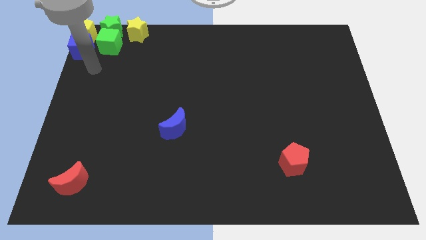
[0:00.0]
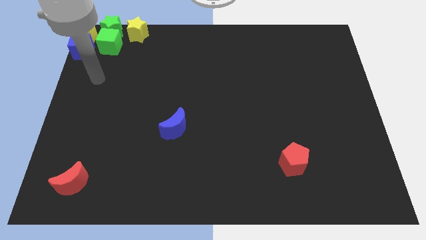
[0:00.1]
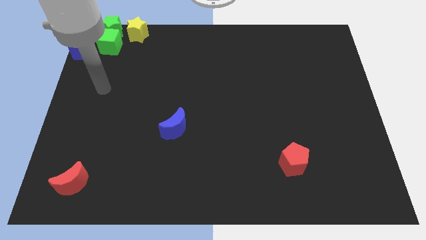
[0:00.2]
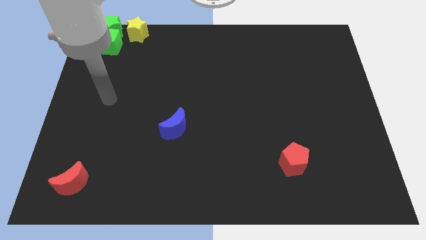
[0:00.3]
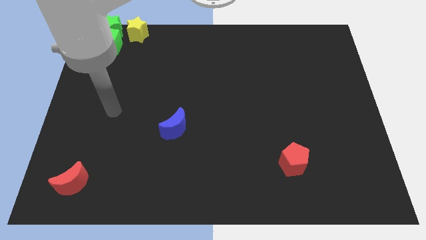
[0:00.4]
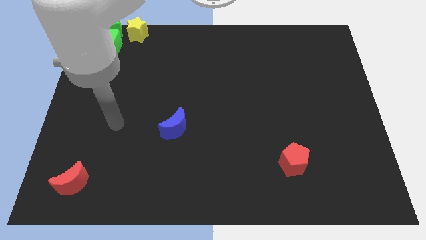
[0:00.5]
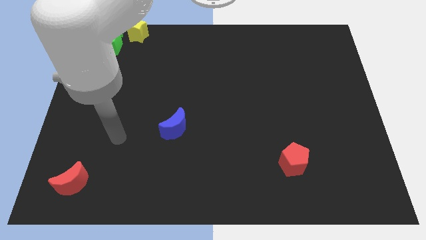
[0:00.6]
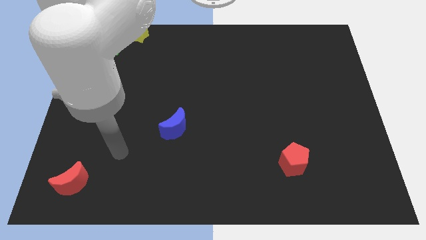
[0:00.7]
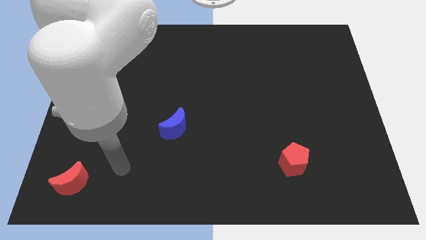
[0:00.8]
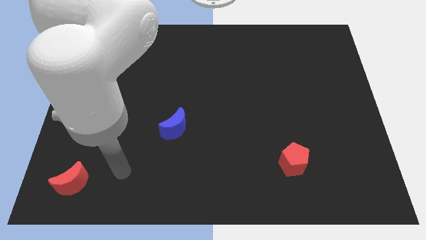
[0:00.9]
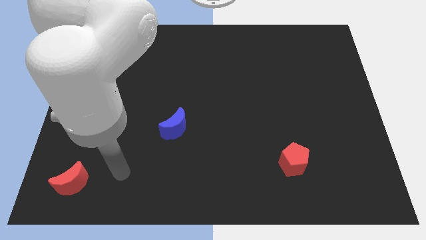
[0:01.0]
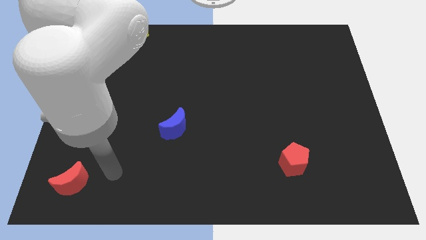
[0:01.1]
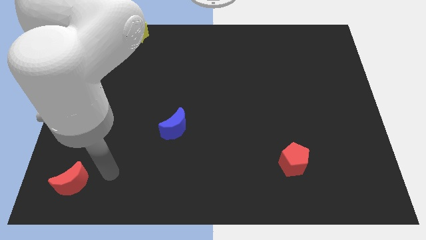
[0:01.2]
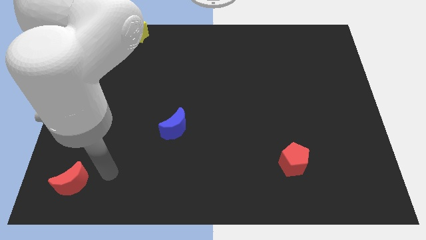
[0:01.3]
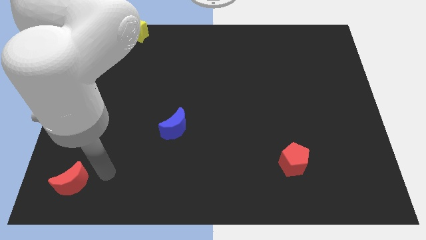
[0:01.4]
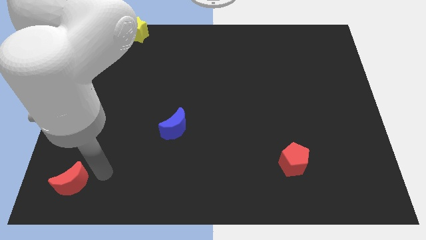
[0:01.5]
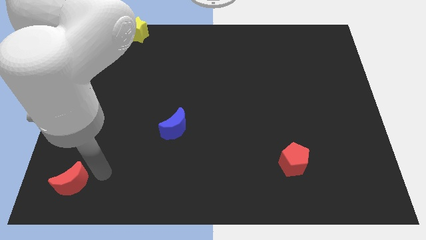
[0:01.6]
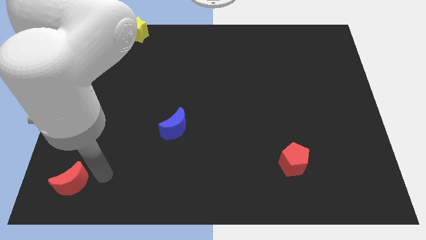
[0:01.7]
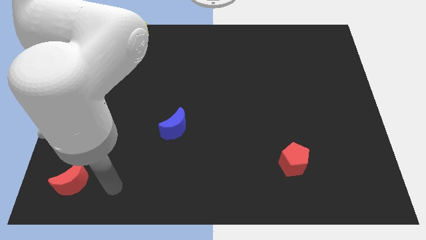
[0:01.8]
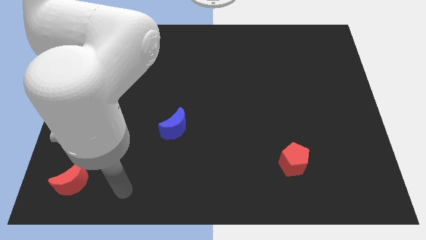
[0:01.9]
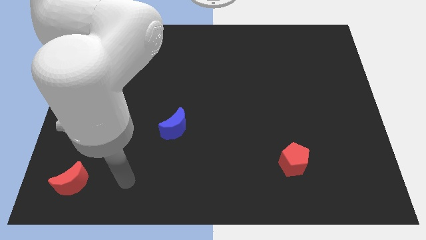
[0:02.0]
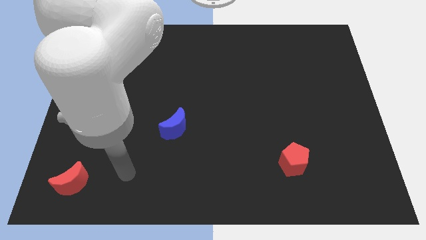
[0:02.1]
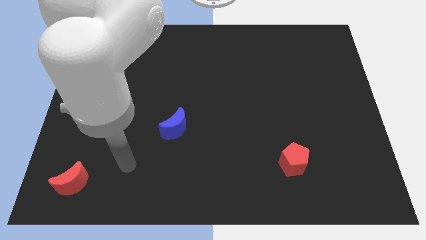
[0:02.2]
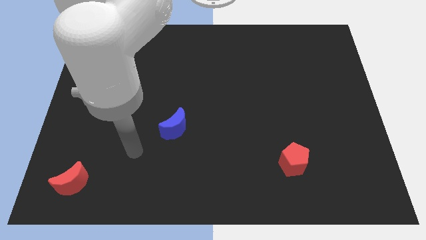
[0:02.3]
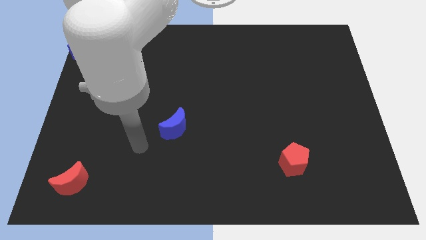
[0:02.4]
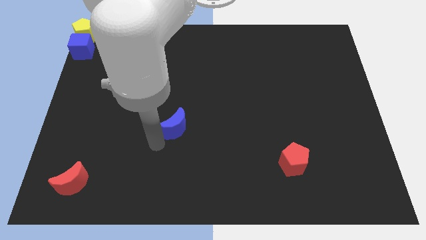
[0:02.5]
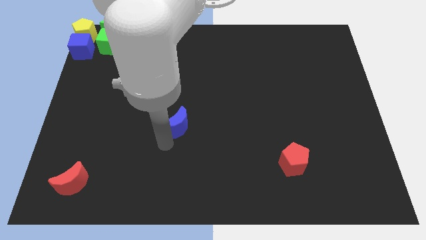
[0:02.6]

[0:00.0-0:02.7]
move the arm to the bottom left to the blue crescent

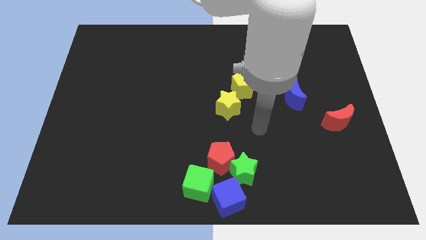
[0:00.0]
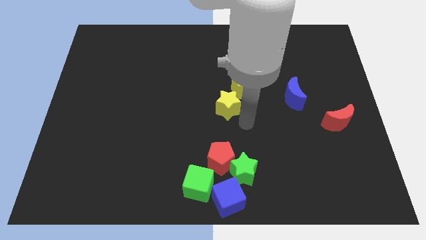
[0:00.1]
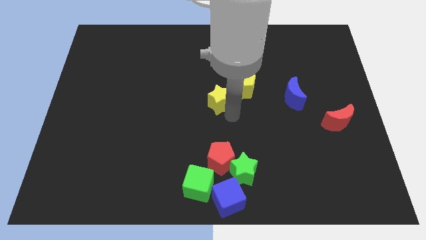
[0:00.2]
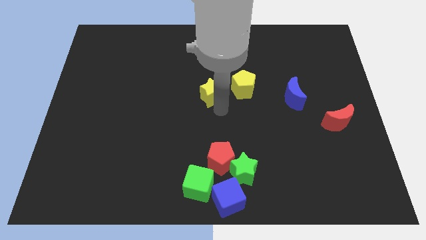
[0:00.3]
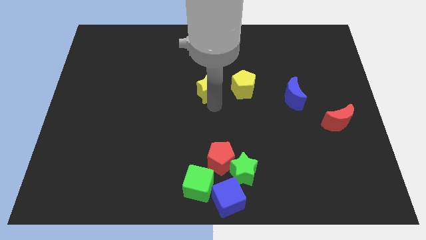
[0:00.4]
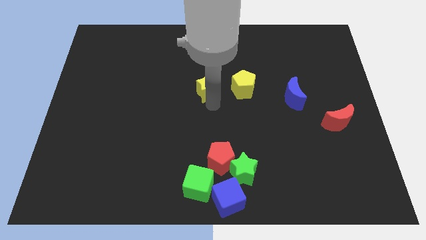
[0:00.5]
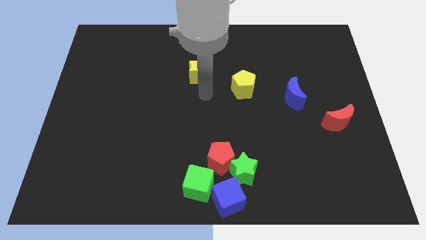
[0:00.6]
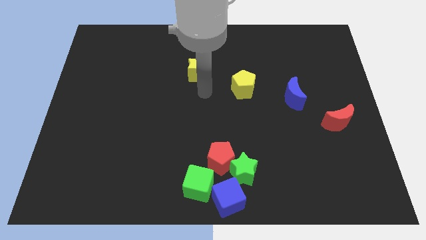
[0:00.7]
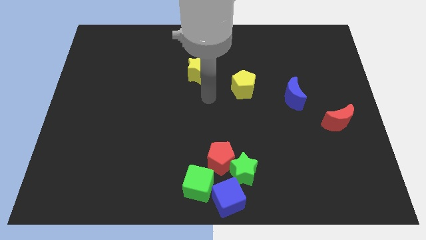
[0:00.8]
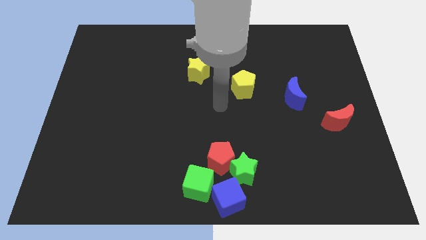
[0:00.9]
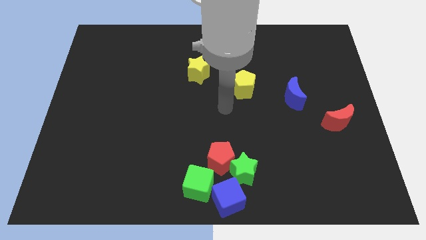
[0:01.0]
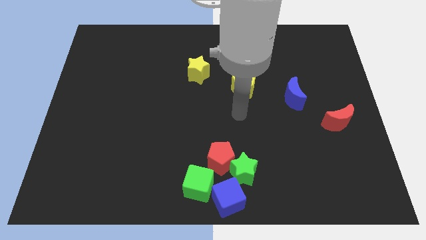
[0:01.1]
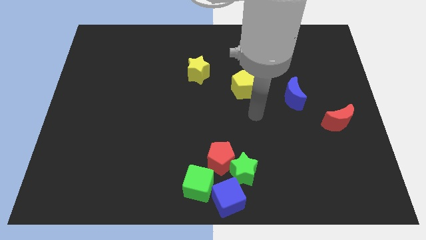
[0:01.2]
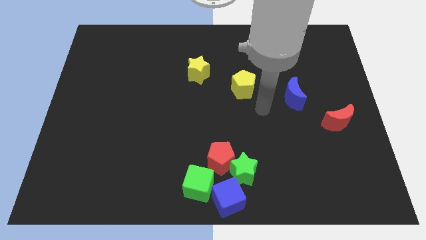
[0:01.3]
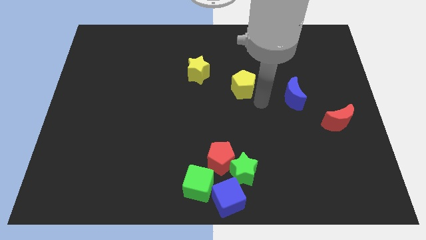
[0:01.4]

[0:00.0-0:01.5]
push the yellow star to the top left of the yellow pentagon

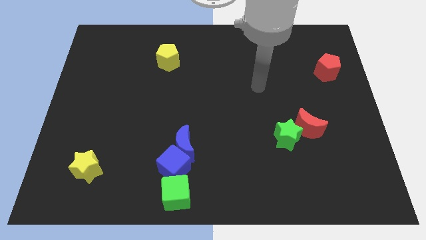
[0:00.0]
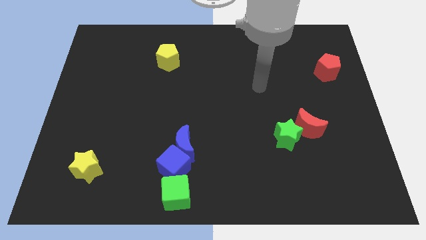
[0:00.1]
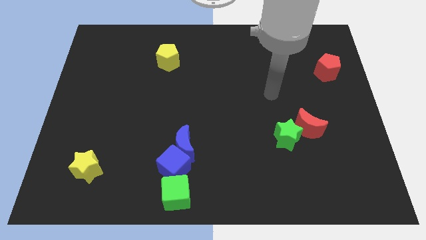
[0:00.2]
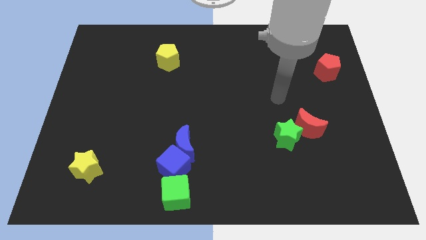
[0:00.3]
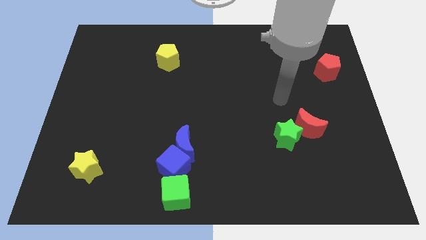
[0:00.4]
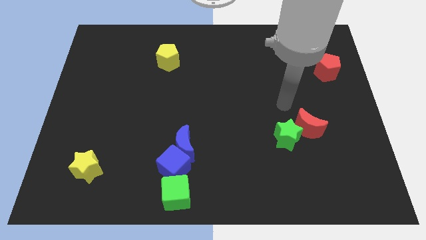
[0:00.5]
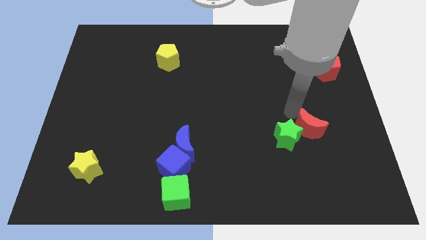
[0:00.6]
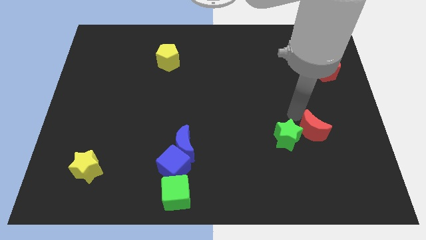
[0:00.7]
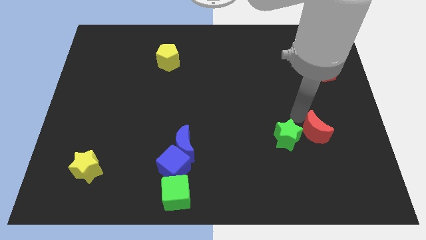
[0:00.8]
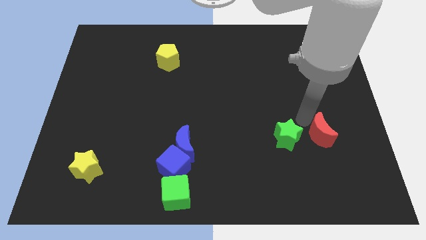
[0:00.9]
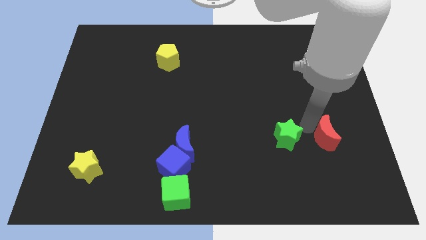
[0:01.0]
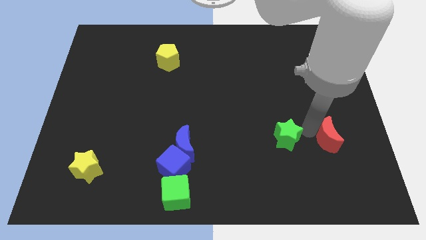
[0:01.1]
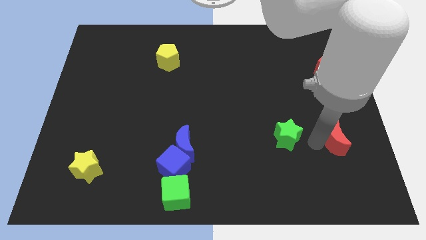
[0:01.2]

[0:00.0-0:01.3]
push the red moon to the right side of the board

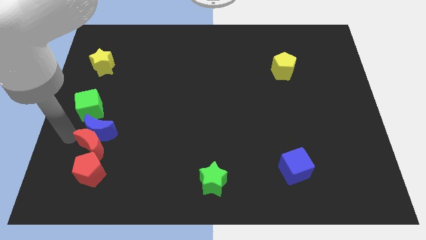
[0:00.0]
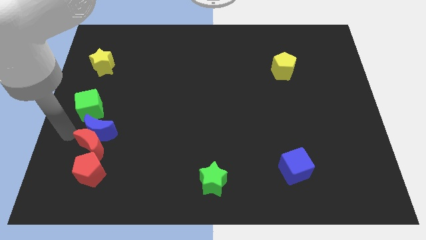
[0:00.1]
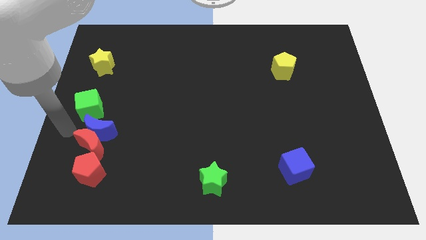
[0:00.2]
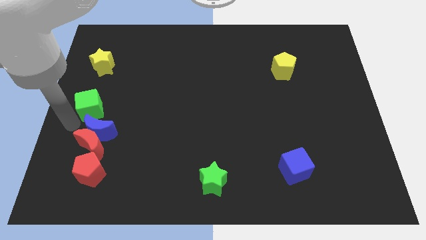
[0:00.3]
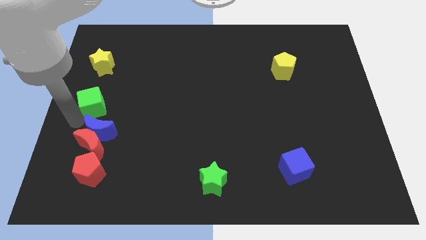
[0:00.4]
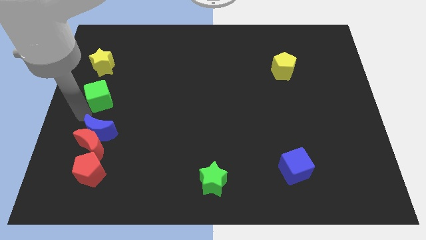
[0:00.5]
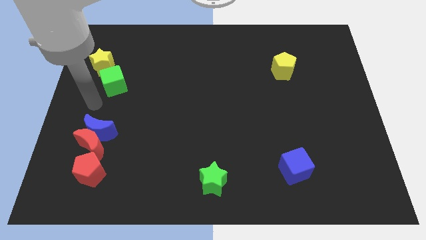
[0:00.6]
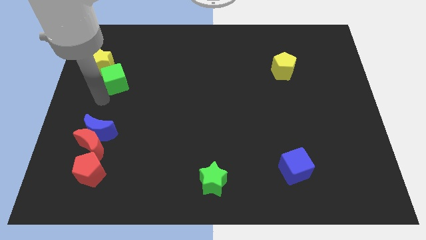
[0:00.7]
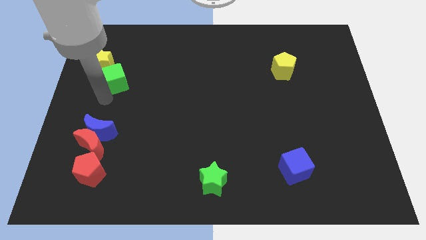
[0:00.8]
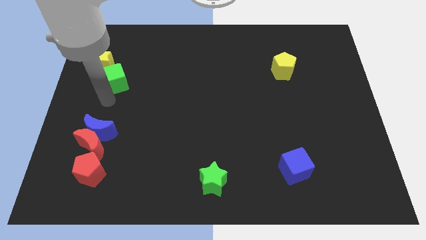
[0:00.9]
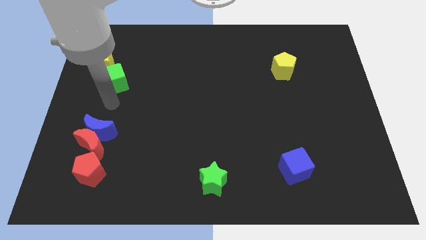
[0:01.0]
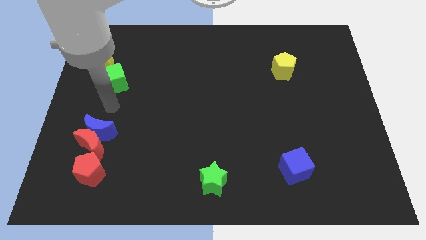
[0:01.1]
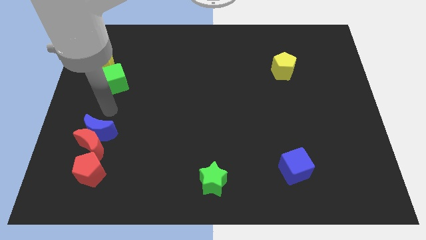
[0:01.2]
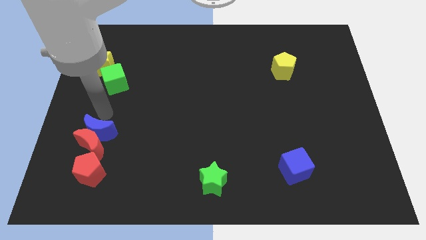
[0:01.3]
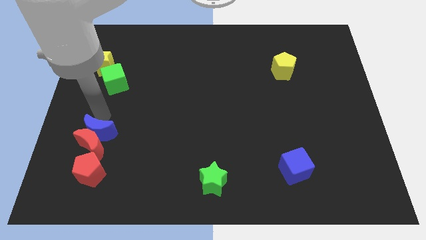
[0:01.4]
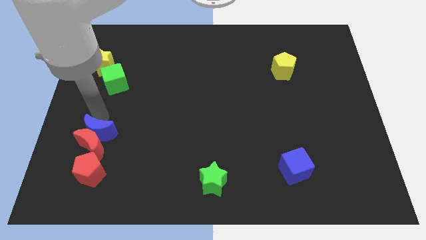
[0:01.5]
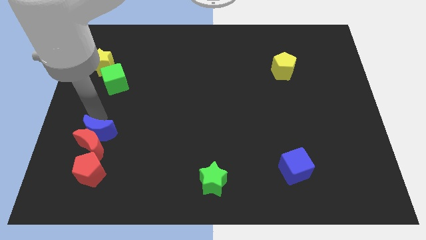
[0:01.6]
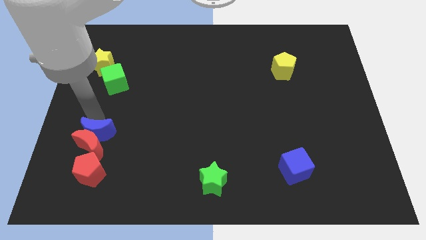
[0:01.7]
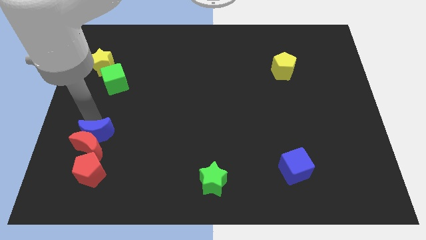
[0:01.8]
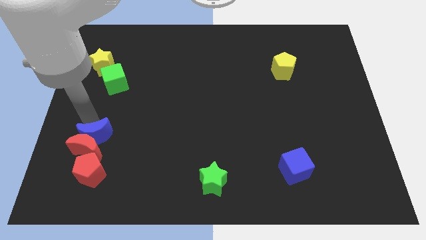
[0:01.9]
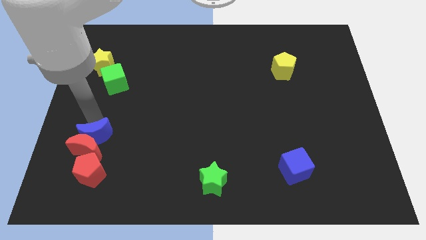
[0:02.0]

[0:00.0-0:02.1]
separate the green cube from the blue crescent

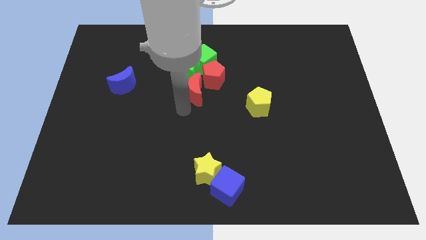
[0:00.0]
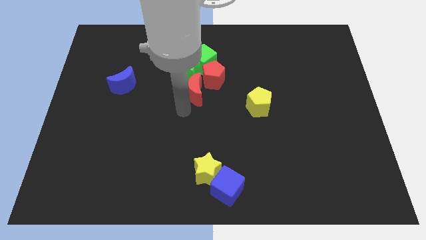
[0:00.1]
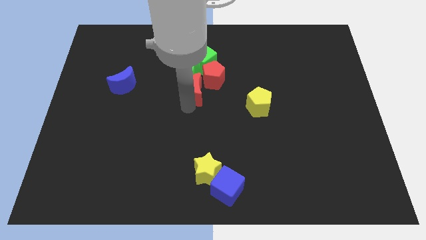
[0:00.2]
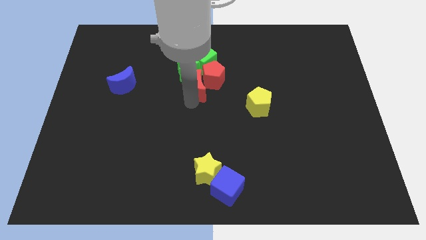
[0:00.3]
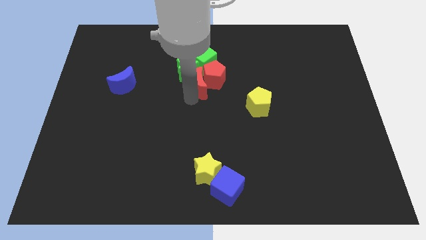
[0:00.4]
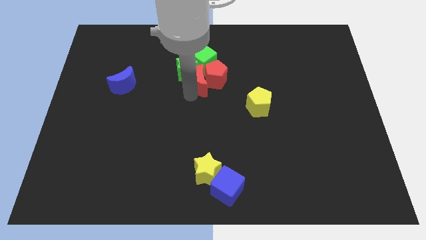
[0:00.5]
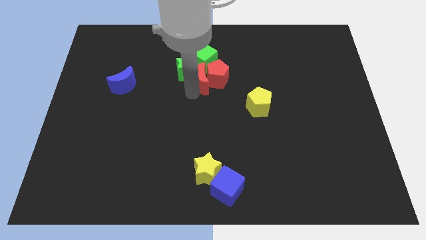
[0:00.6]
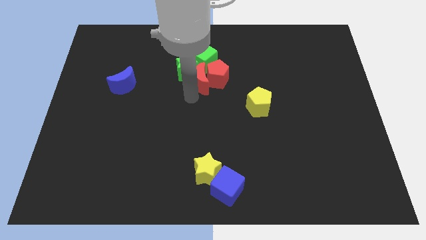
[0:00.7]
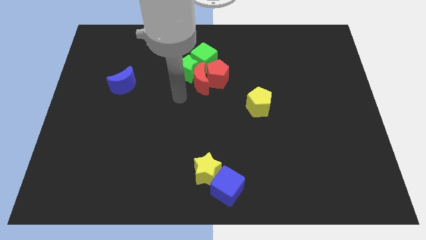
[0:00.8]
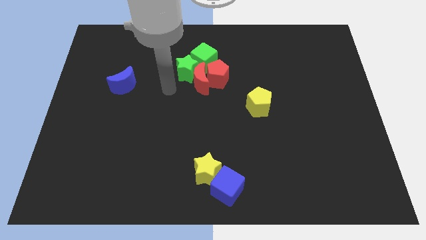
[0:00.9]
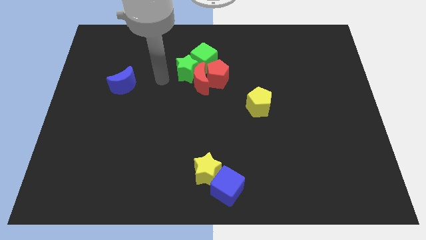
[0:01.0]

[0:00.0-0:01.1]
move the red moon into the group of the blocks

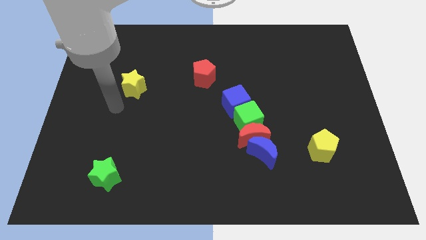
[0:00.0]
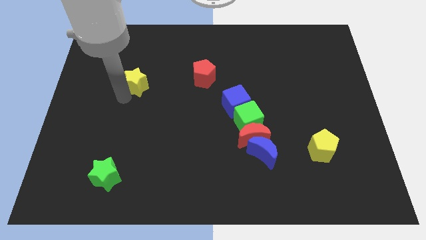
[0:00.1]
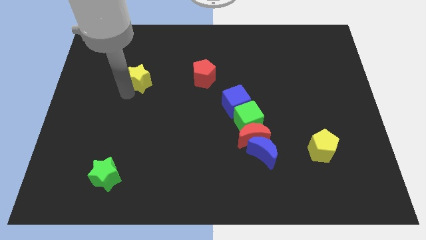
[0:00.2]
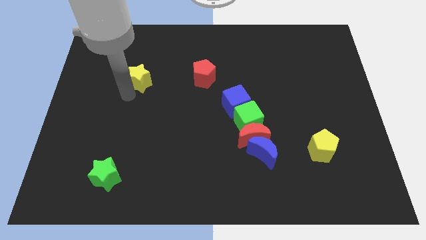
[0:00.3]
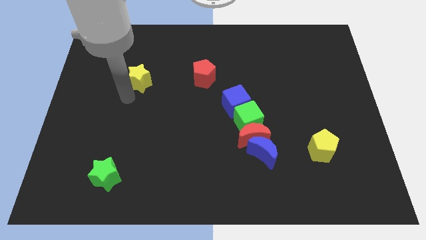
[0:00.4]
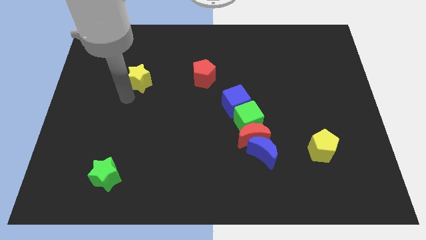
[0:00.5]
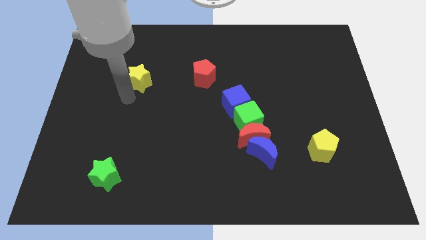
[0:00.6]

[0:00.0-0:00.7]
push yellow star slightly above
